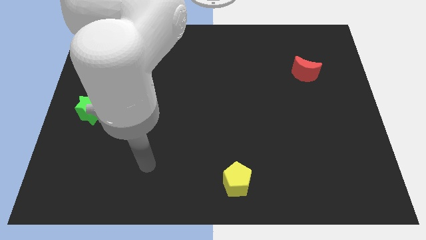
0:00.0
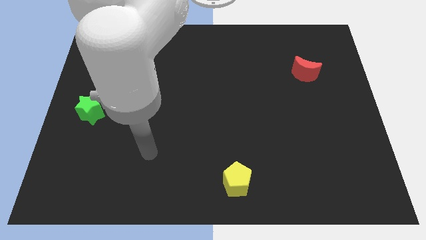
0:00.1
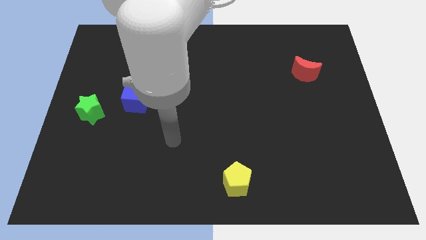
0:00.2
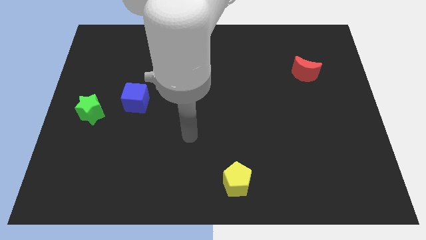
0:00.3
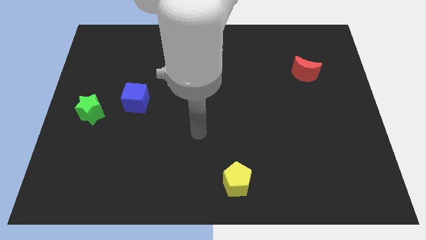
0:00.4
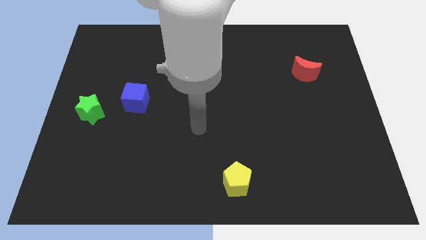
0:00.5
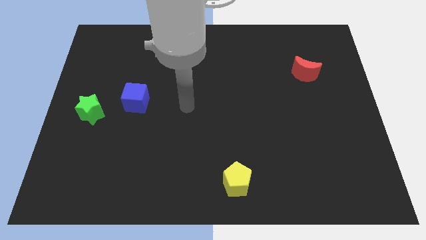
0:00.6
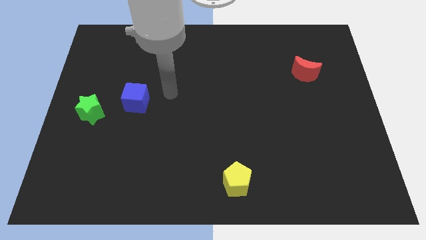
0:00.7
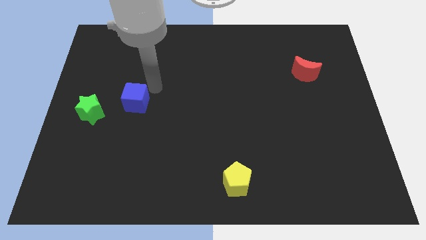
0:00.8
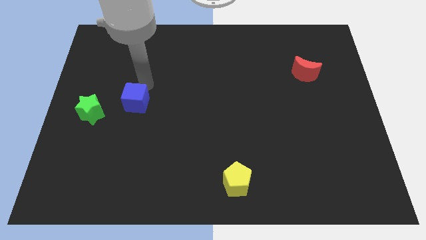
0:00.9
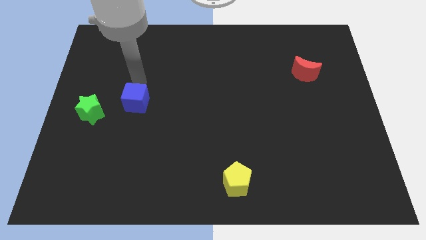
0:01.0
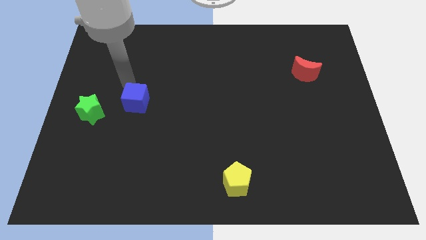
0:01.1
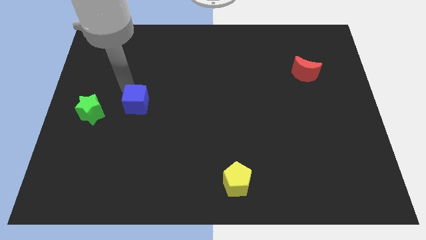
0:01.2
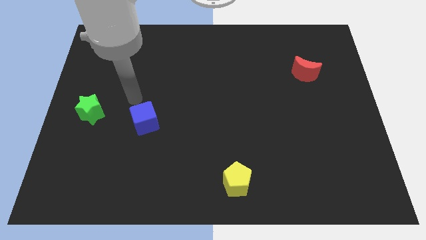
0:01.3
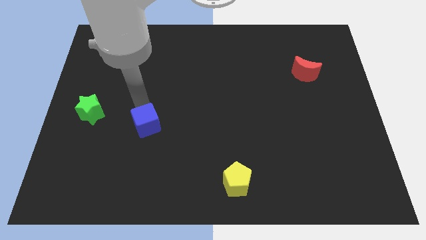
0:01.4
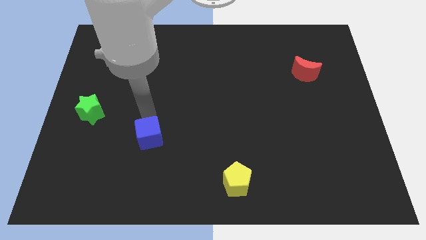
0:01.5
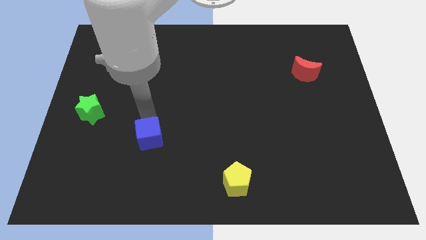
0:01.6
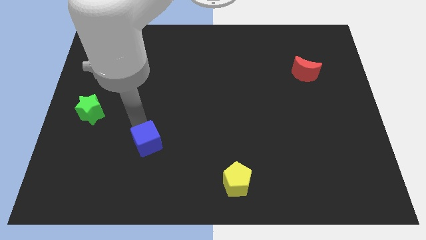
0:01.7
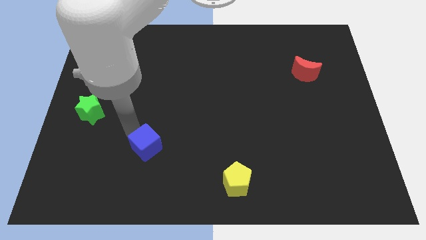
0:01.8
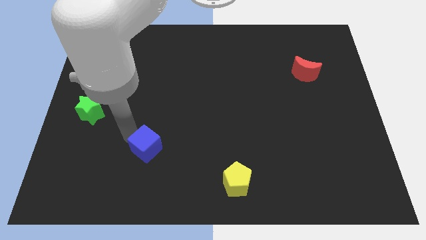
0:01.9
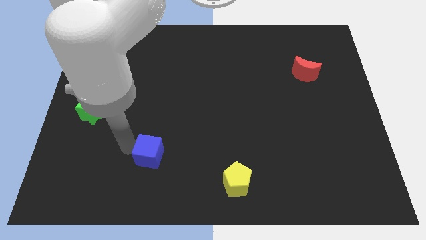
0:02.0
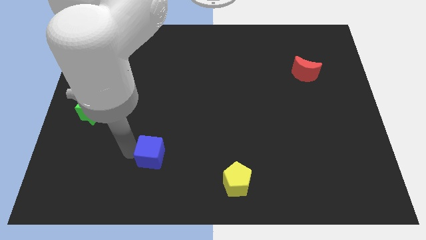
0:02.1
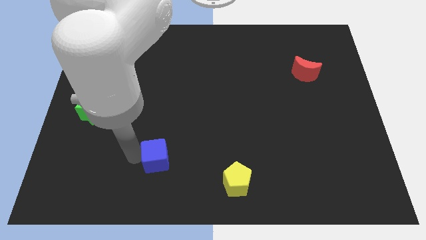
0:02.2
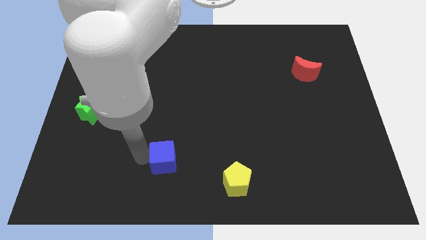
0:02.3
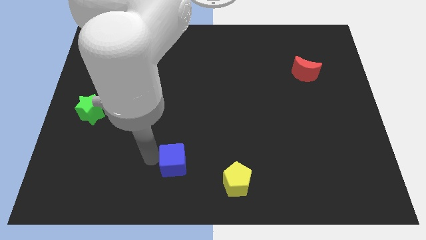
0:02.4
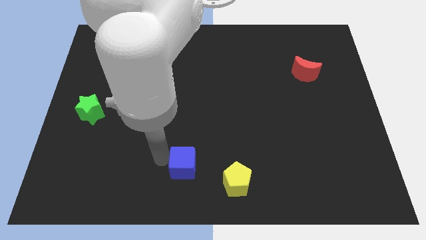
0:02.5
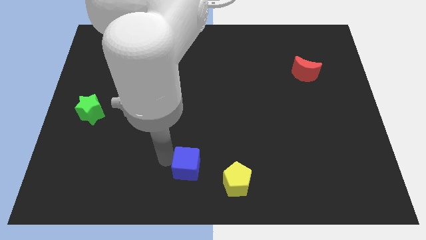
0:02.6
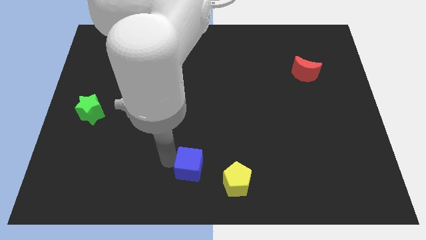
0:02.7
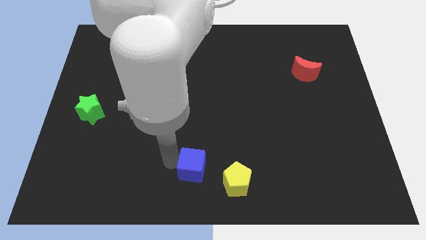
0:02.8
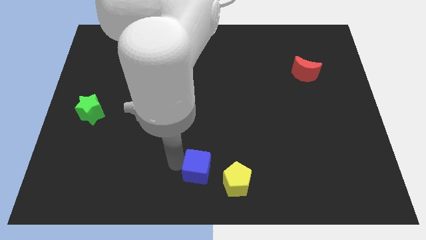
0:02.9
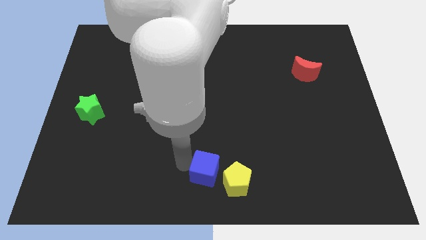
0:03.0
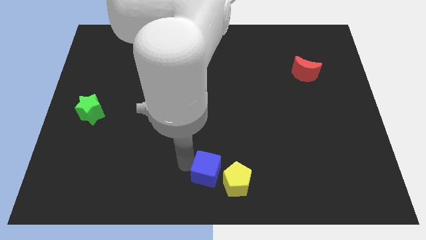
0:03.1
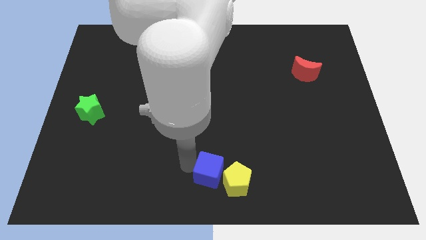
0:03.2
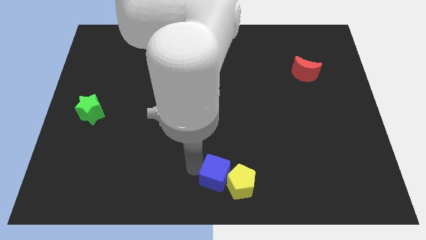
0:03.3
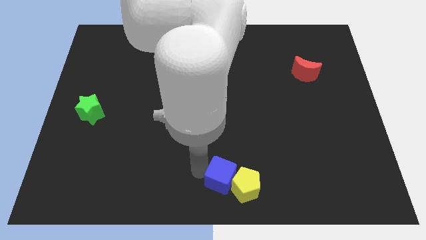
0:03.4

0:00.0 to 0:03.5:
slide the cube next to the yellow block

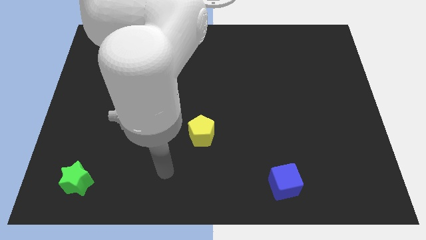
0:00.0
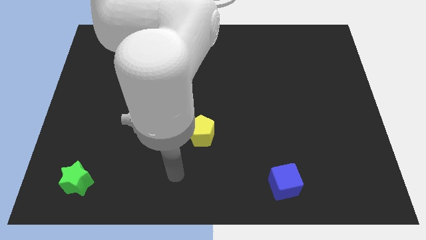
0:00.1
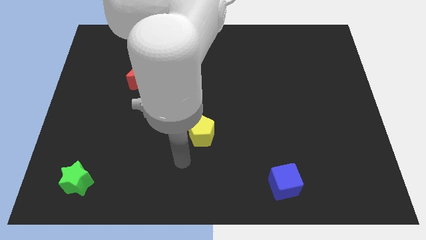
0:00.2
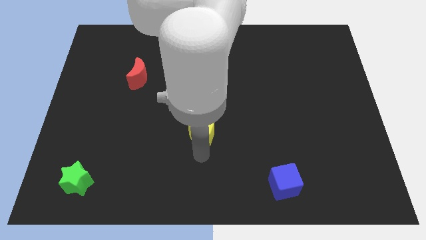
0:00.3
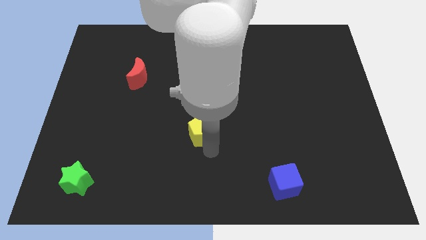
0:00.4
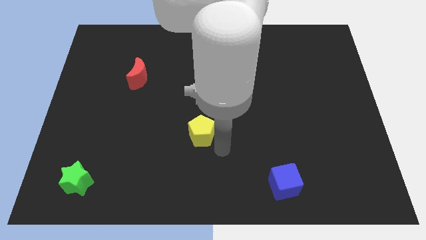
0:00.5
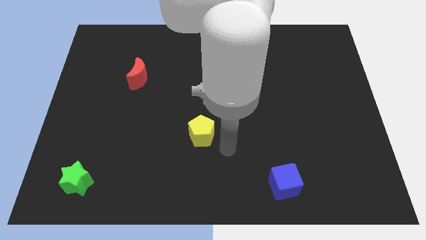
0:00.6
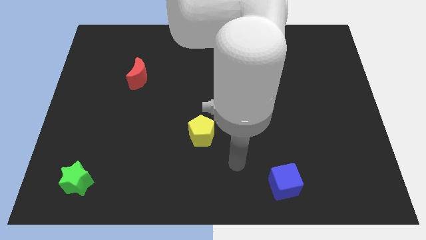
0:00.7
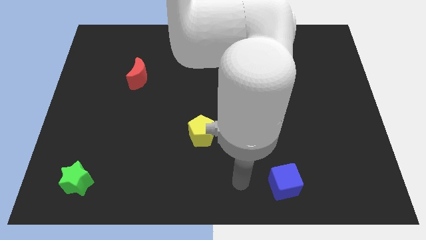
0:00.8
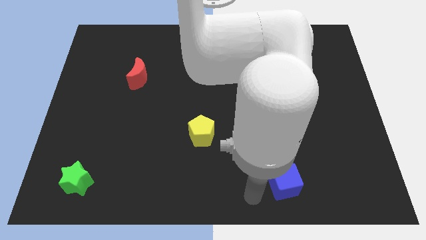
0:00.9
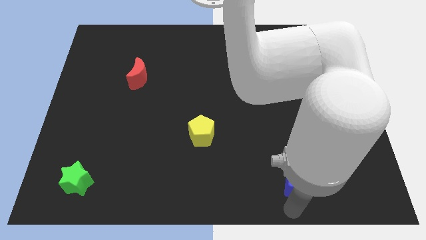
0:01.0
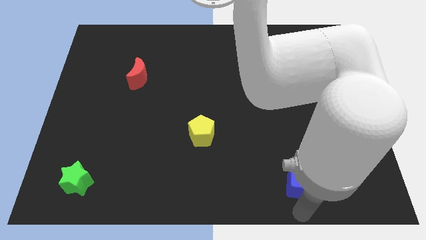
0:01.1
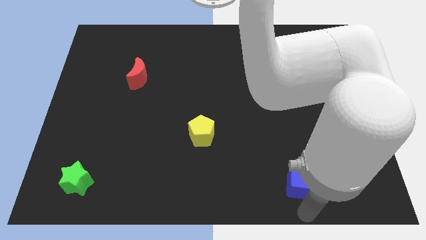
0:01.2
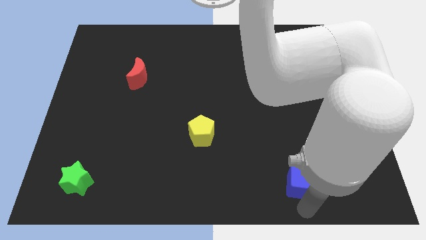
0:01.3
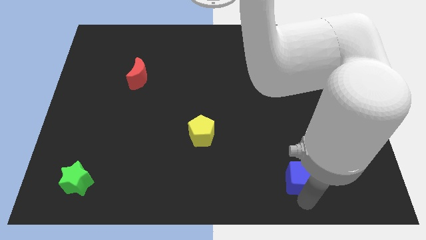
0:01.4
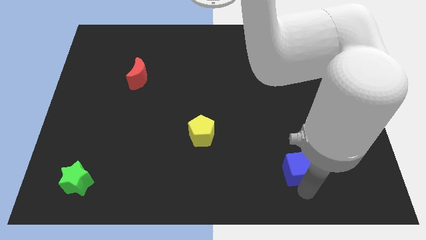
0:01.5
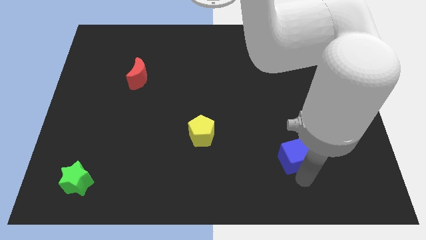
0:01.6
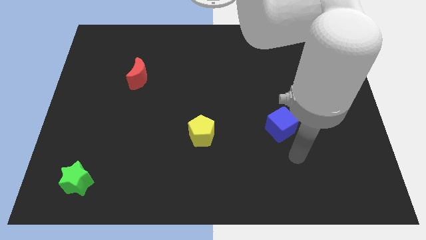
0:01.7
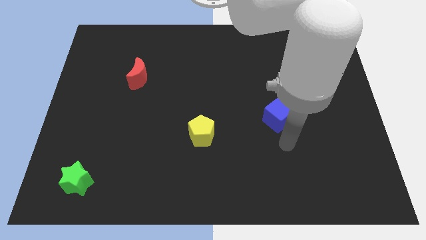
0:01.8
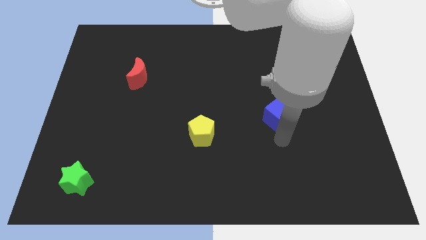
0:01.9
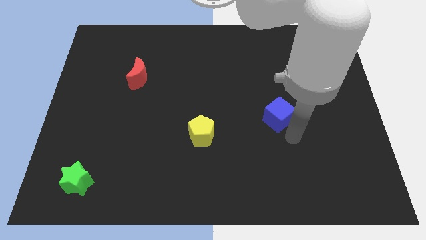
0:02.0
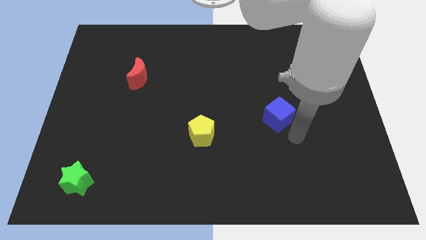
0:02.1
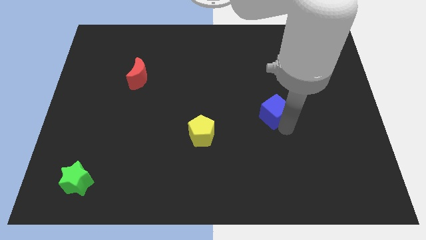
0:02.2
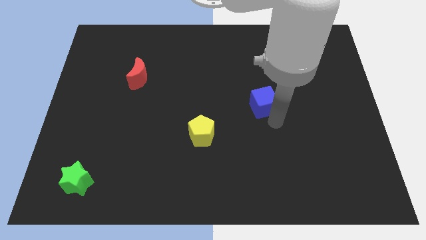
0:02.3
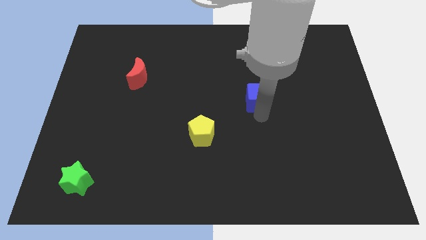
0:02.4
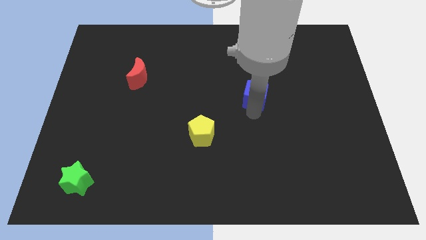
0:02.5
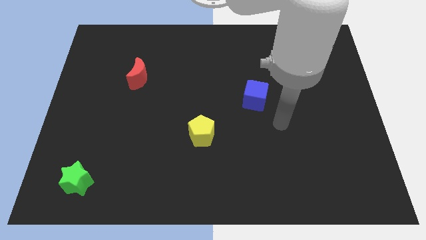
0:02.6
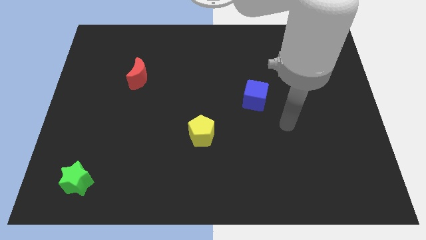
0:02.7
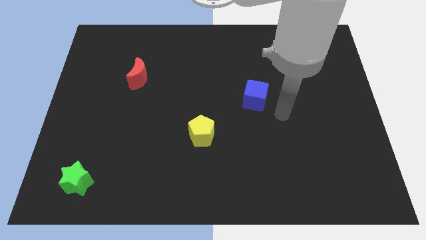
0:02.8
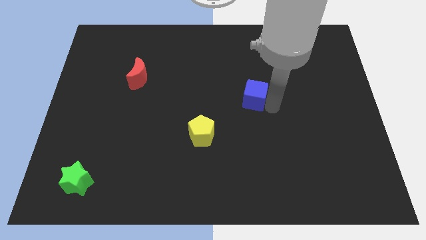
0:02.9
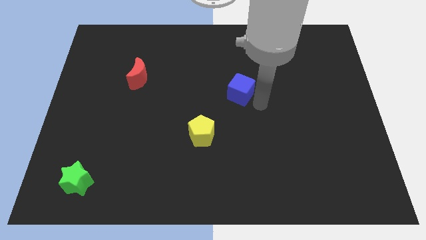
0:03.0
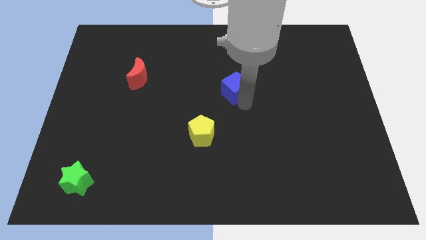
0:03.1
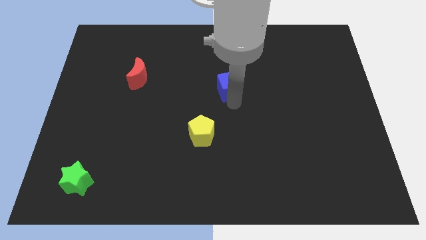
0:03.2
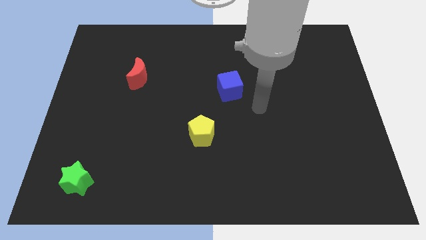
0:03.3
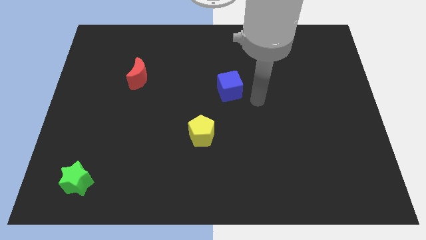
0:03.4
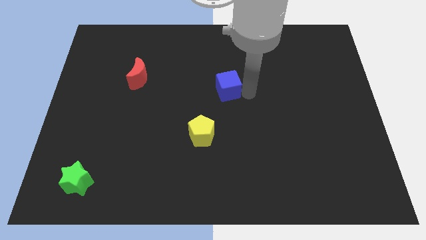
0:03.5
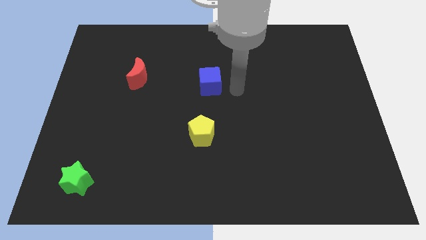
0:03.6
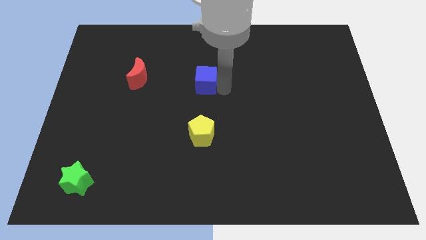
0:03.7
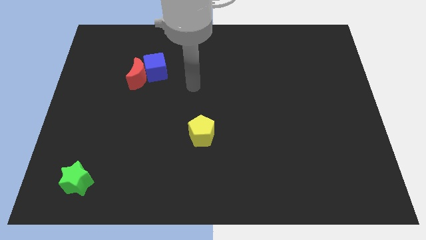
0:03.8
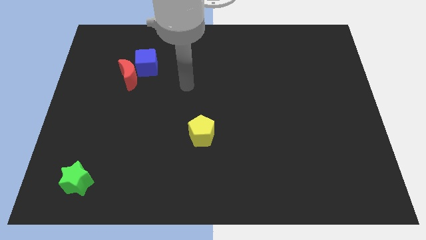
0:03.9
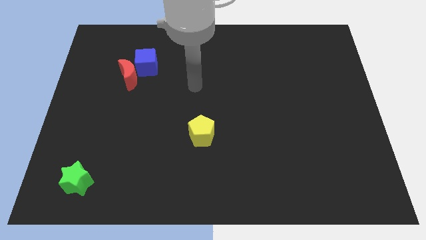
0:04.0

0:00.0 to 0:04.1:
slide the blue block to the moon

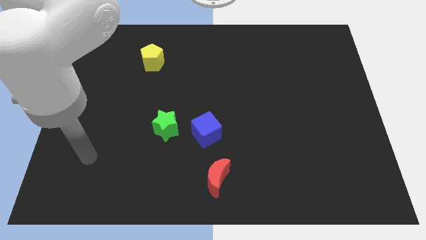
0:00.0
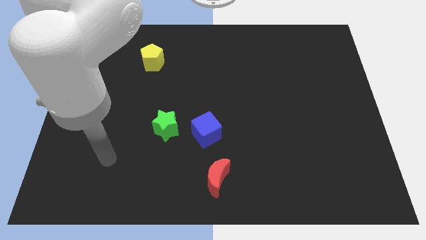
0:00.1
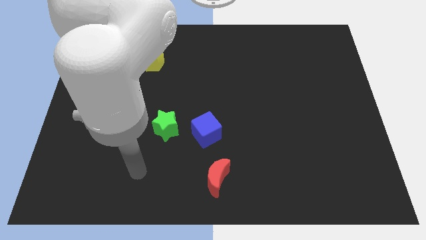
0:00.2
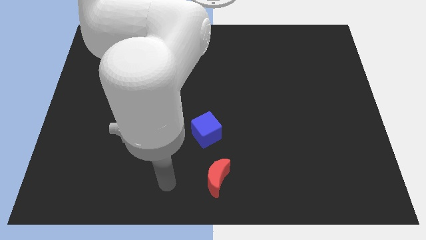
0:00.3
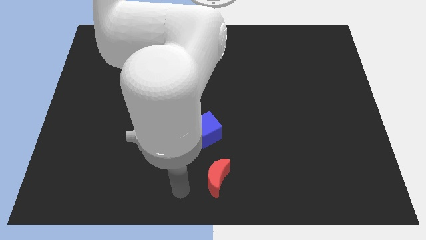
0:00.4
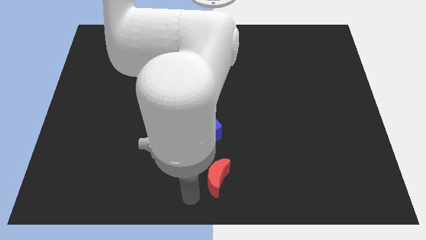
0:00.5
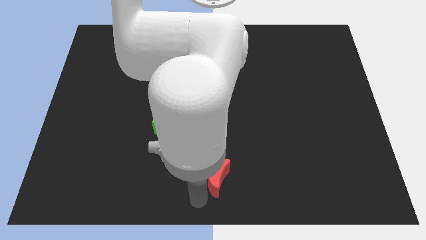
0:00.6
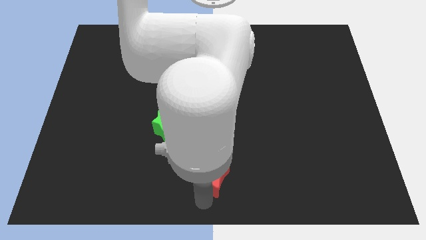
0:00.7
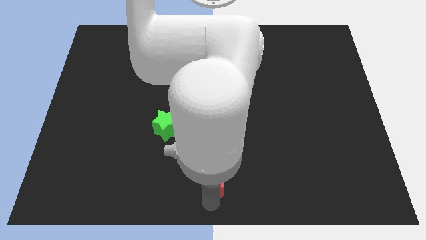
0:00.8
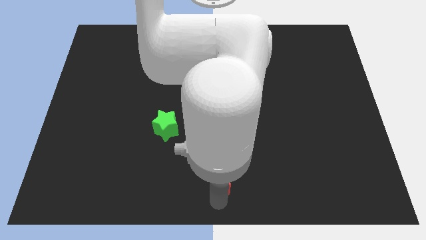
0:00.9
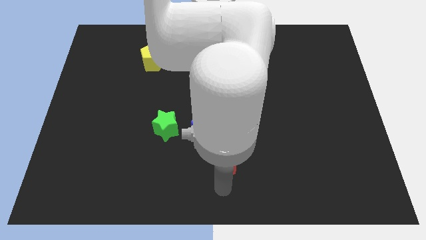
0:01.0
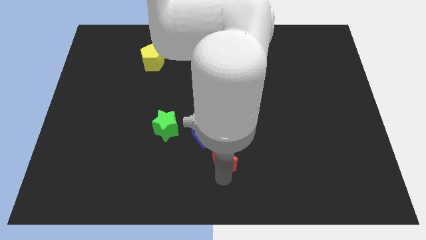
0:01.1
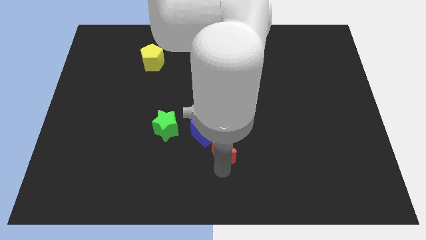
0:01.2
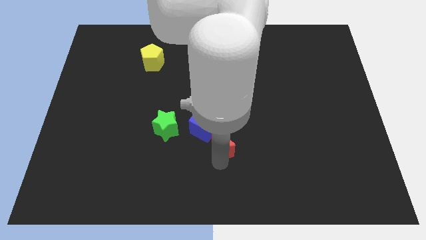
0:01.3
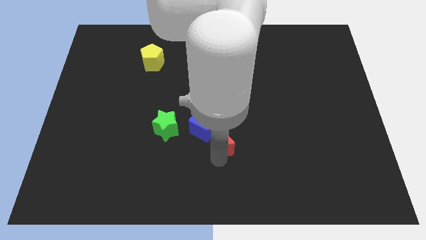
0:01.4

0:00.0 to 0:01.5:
move the red moon close to the blue block
